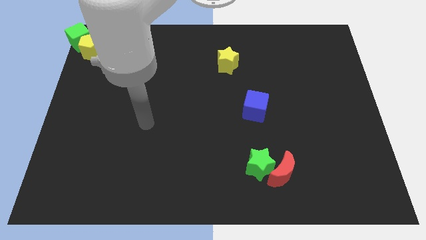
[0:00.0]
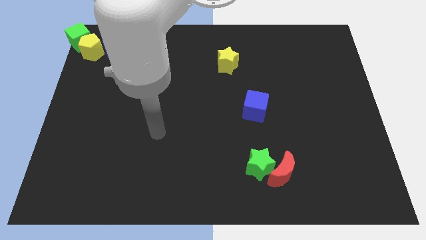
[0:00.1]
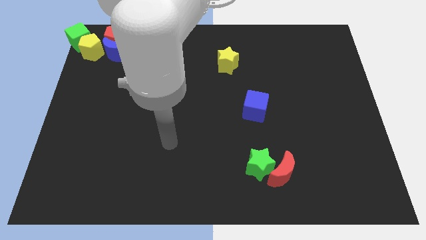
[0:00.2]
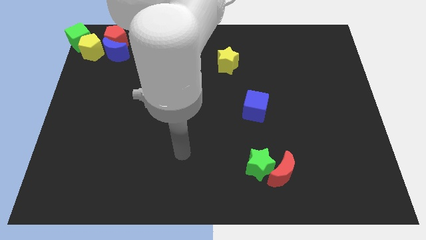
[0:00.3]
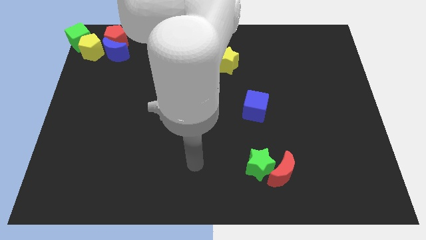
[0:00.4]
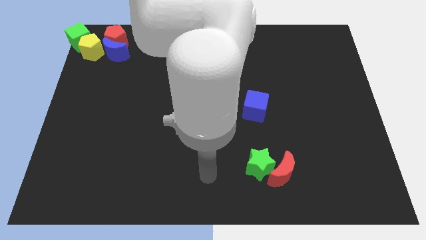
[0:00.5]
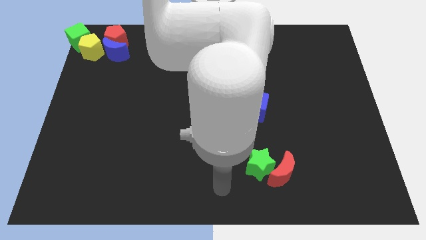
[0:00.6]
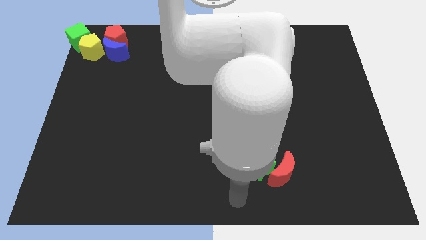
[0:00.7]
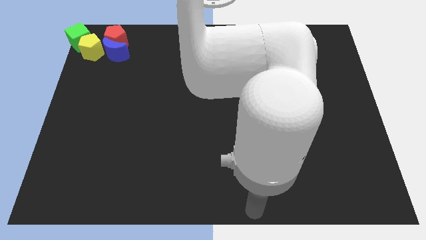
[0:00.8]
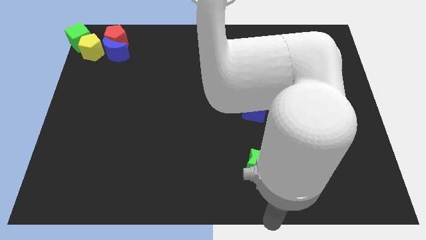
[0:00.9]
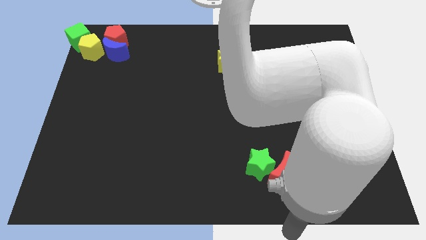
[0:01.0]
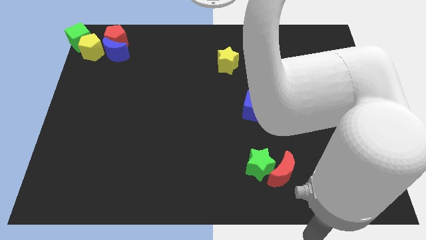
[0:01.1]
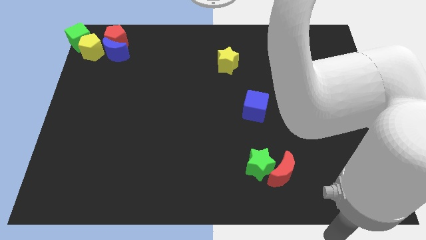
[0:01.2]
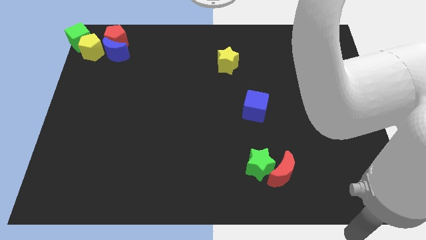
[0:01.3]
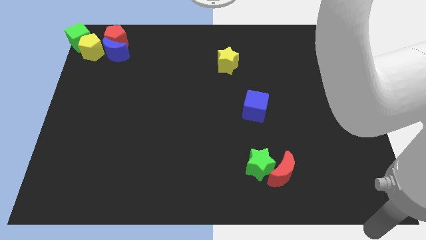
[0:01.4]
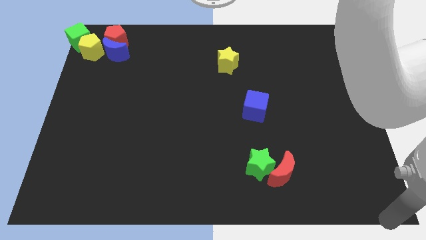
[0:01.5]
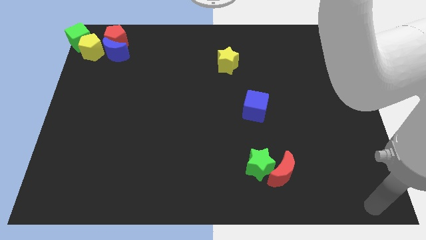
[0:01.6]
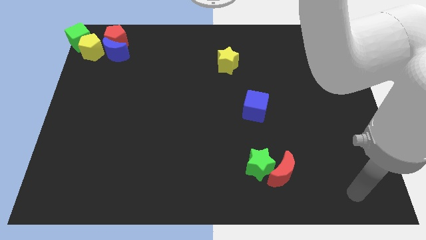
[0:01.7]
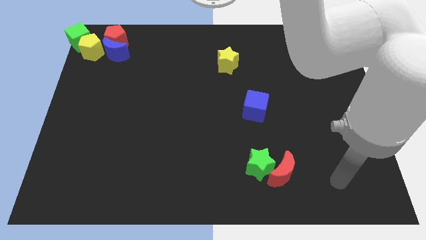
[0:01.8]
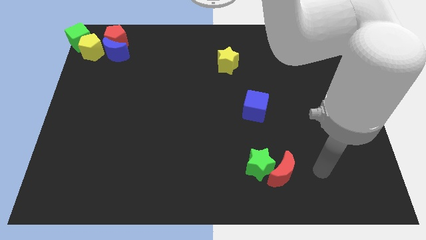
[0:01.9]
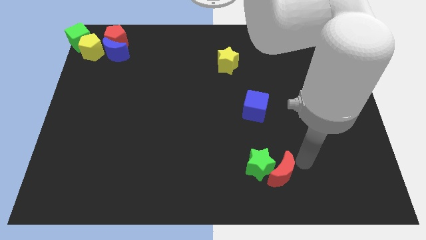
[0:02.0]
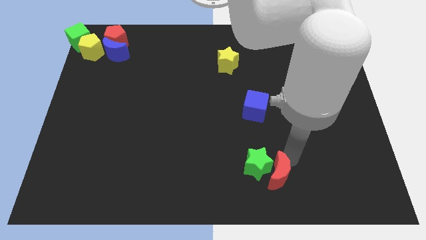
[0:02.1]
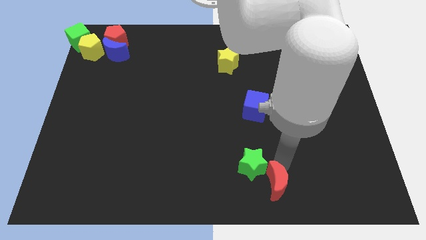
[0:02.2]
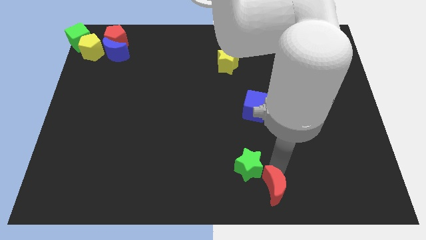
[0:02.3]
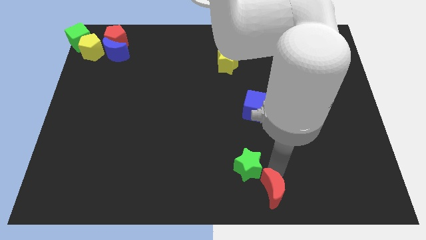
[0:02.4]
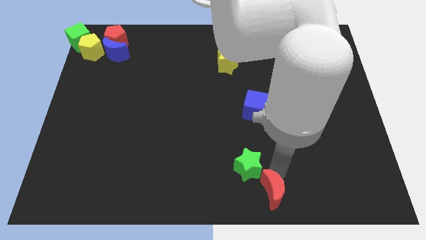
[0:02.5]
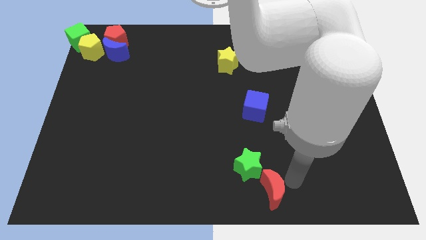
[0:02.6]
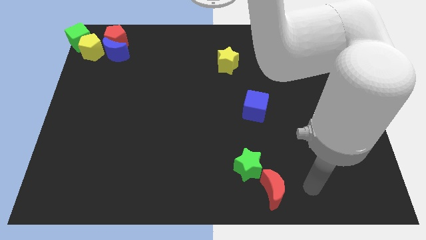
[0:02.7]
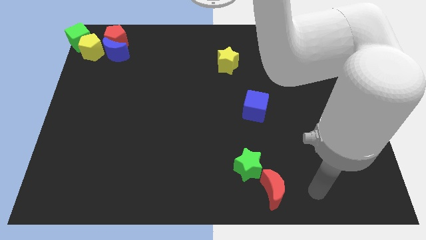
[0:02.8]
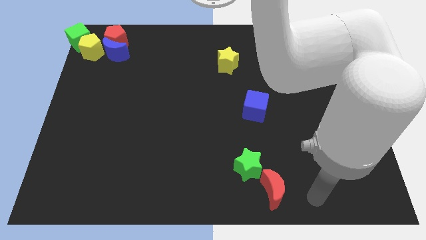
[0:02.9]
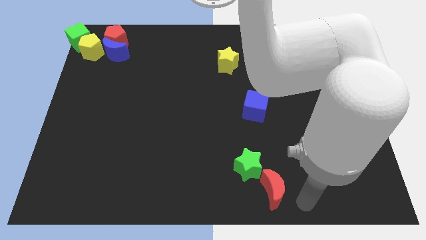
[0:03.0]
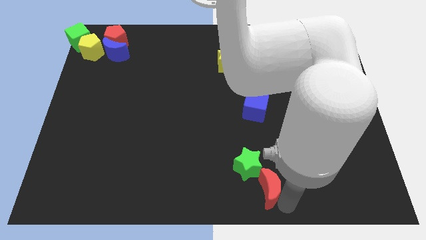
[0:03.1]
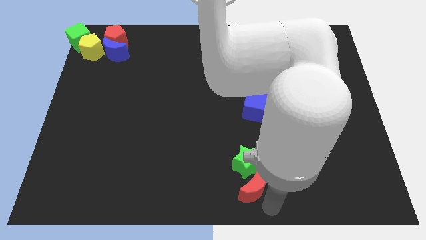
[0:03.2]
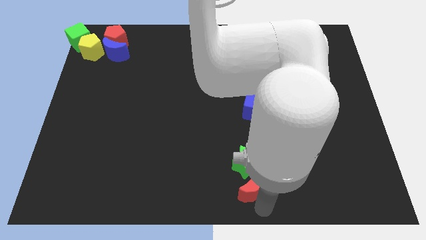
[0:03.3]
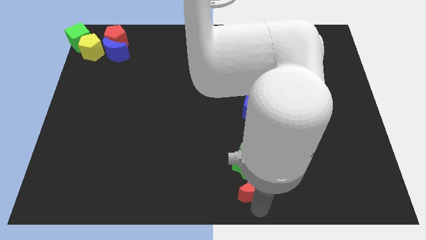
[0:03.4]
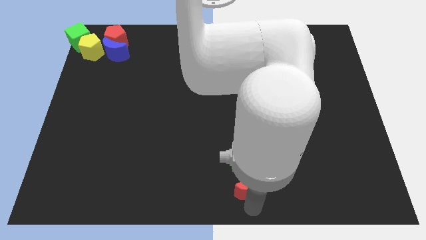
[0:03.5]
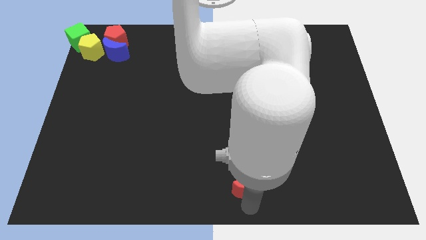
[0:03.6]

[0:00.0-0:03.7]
move the red crescent and green cube slightly to the top

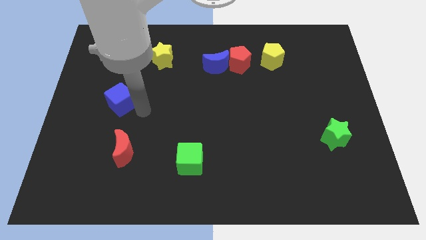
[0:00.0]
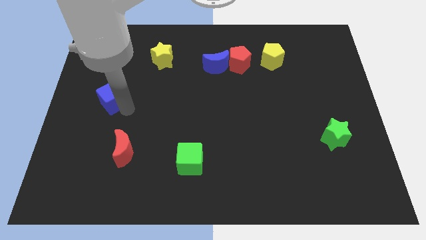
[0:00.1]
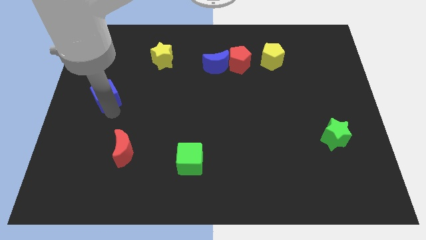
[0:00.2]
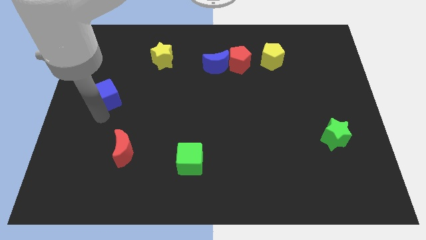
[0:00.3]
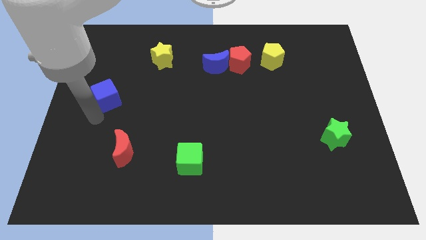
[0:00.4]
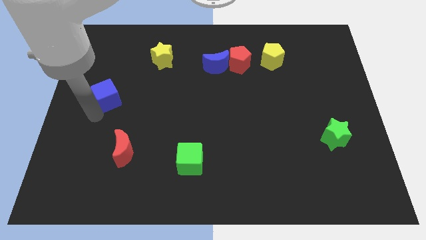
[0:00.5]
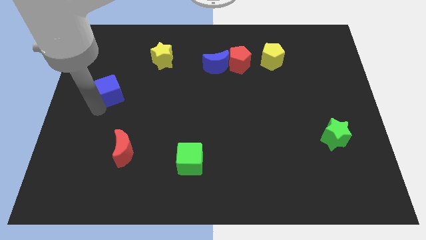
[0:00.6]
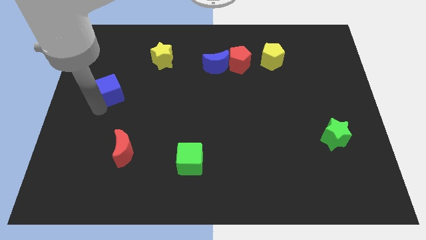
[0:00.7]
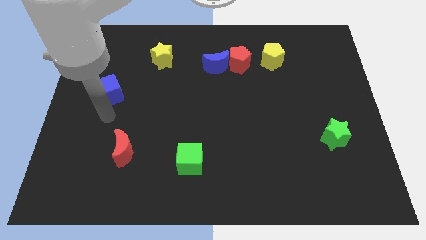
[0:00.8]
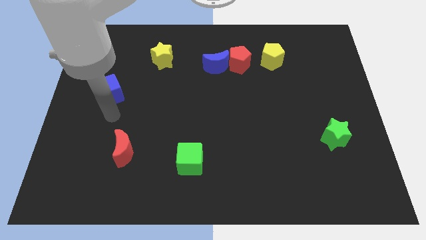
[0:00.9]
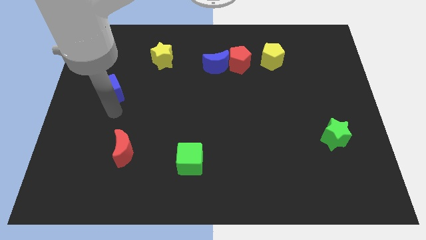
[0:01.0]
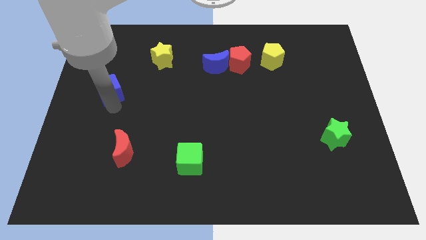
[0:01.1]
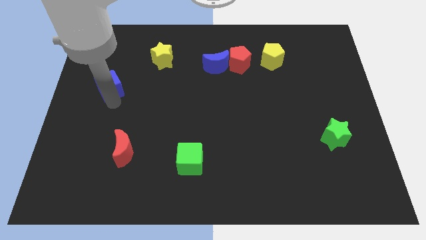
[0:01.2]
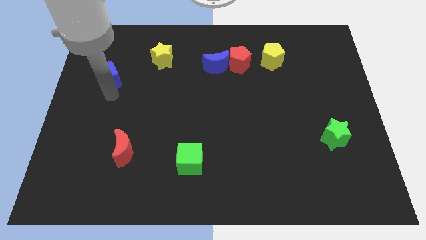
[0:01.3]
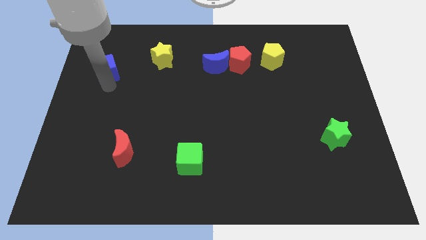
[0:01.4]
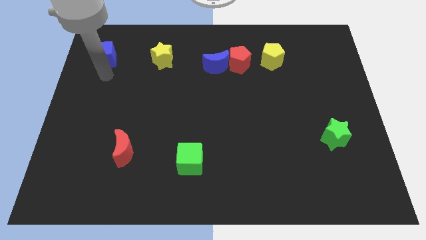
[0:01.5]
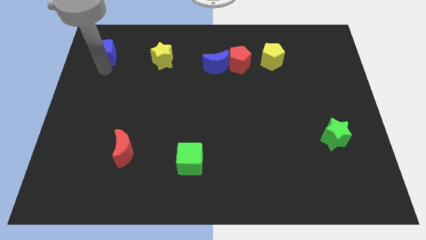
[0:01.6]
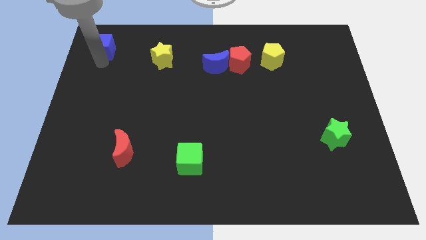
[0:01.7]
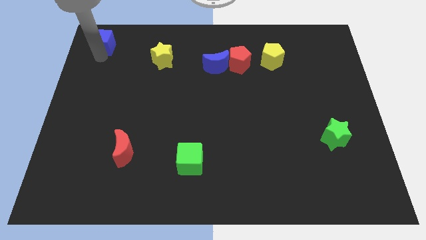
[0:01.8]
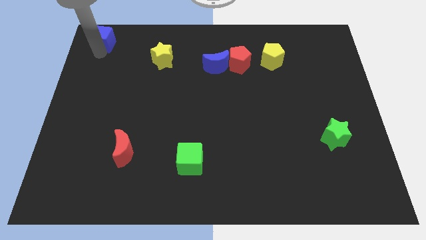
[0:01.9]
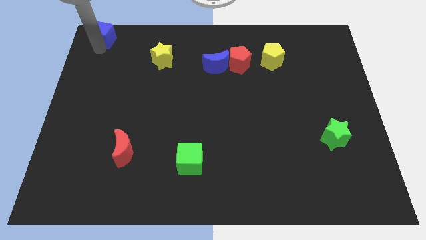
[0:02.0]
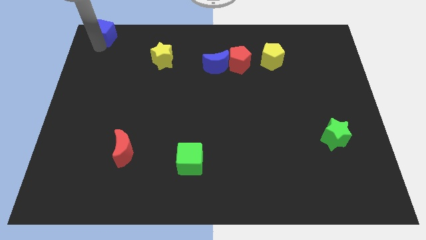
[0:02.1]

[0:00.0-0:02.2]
push the blue cube towards top

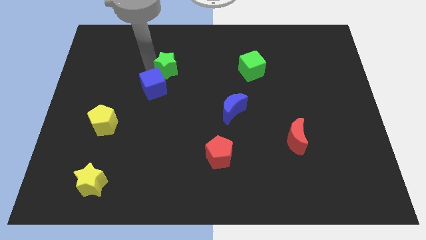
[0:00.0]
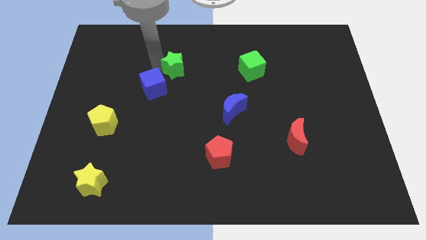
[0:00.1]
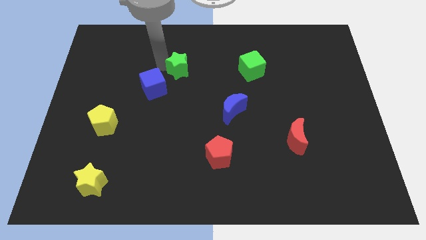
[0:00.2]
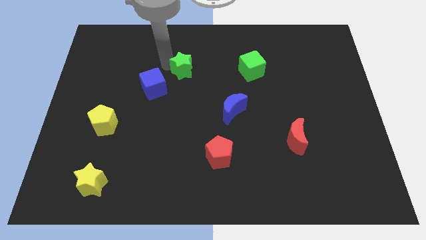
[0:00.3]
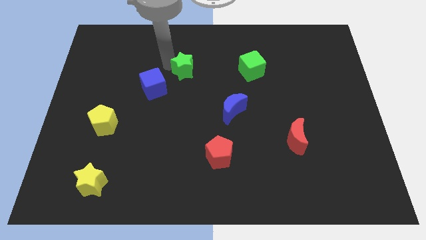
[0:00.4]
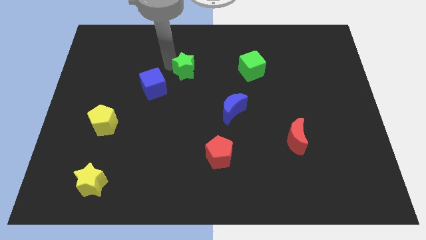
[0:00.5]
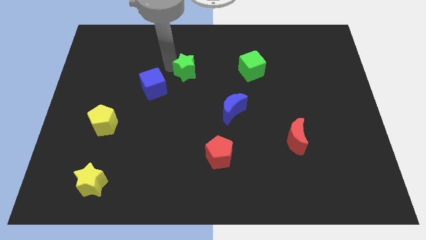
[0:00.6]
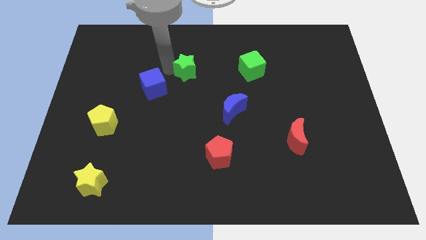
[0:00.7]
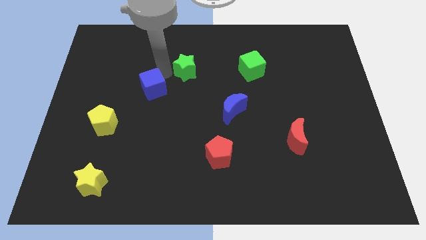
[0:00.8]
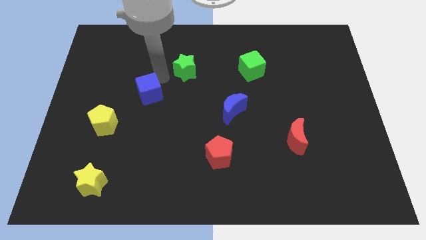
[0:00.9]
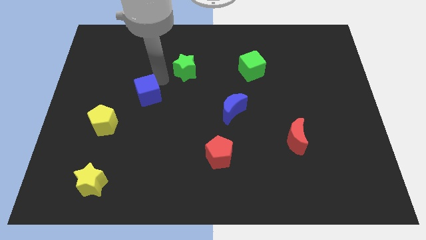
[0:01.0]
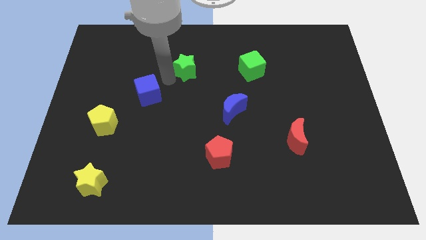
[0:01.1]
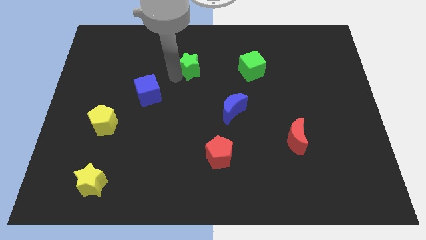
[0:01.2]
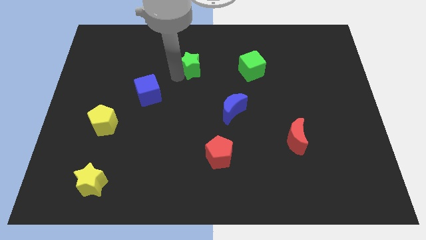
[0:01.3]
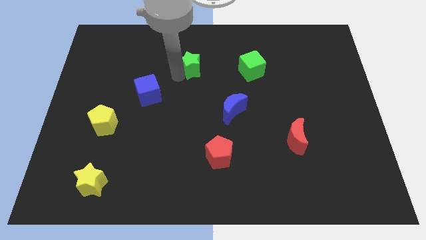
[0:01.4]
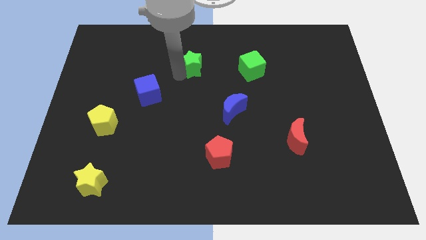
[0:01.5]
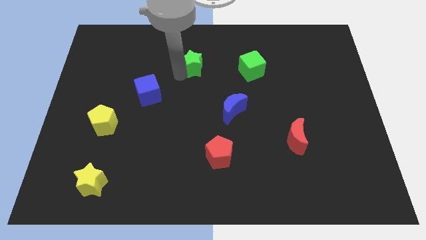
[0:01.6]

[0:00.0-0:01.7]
move the green star diagonal to the left of the green cube

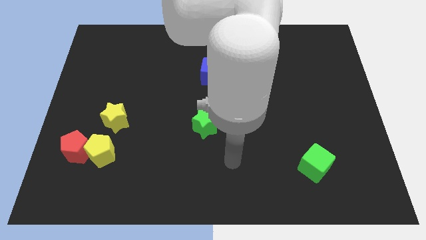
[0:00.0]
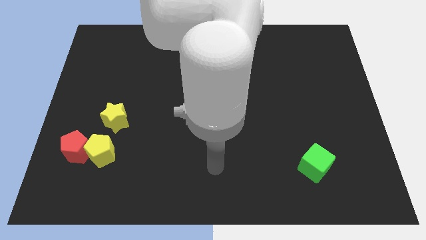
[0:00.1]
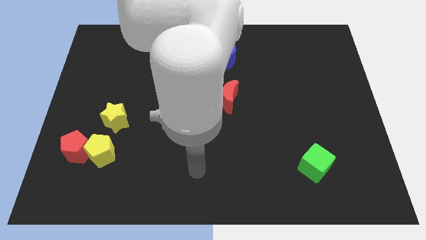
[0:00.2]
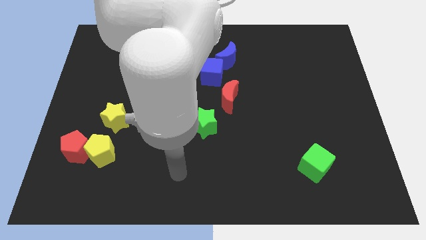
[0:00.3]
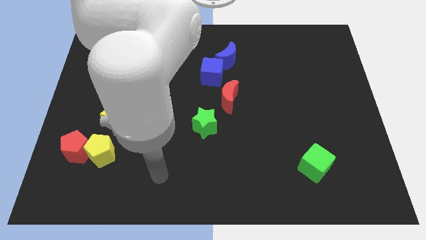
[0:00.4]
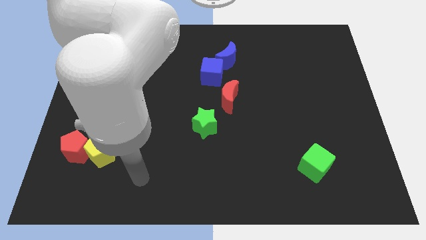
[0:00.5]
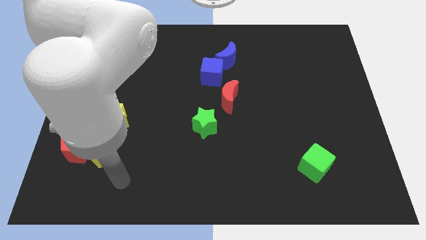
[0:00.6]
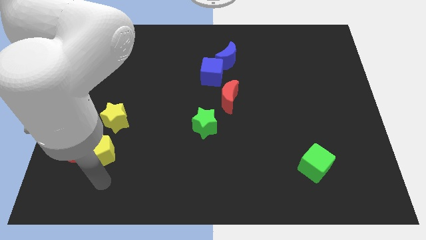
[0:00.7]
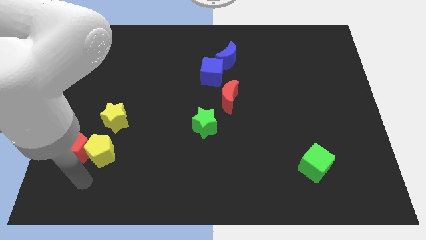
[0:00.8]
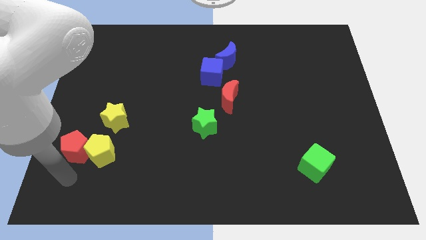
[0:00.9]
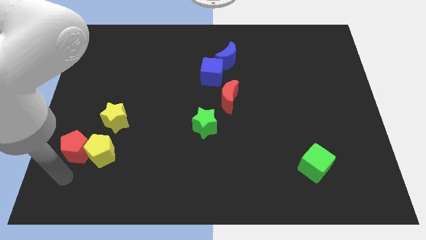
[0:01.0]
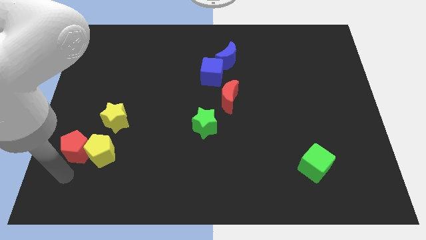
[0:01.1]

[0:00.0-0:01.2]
point the arm below the ed pentagon

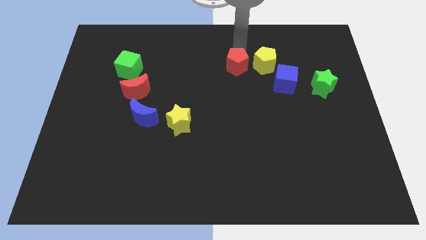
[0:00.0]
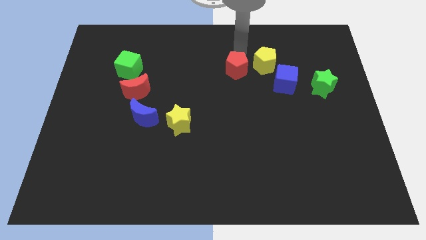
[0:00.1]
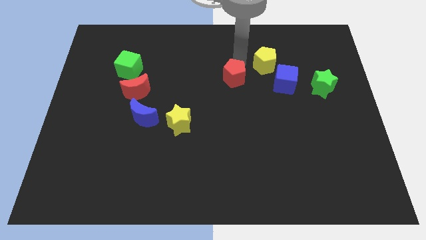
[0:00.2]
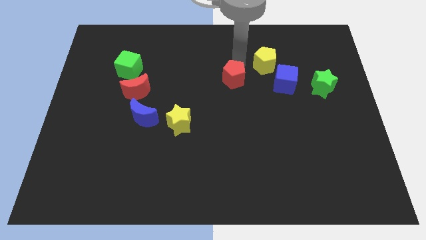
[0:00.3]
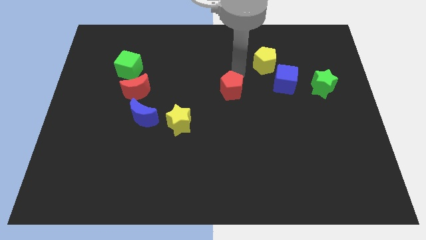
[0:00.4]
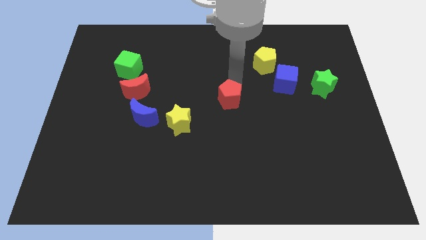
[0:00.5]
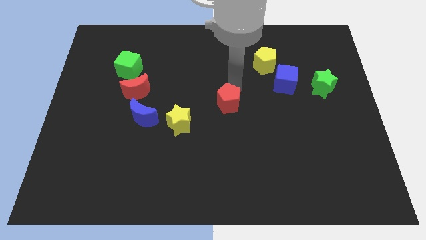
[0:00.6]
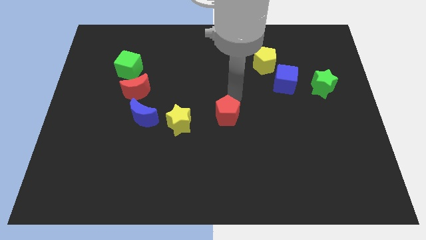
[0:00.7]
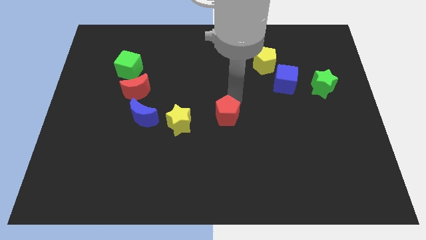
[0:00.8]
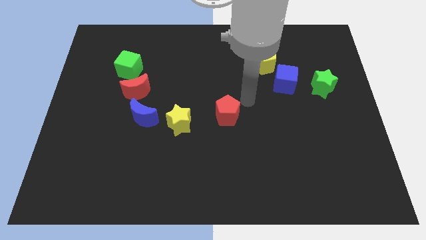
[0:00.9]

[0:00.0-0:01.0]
move the red pentagon to the bottom of the board
